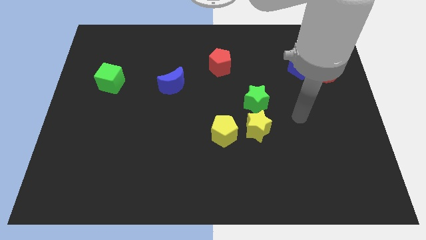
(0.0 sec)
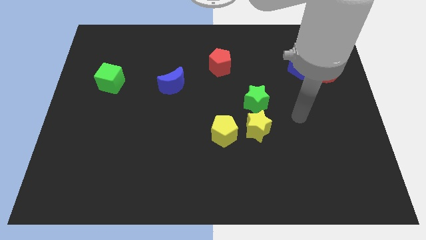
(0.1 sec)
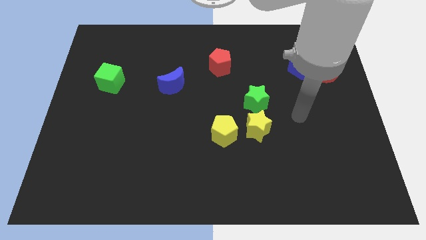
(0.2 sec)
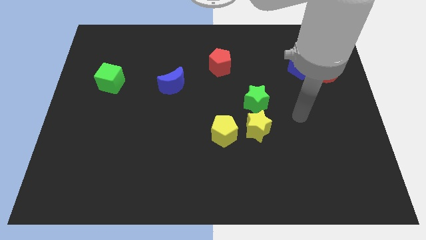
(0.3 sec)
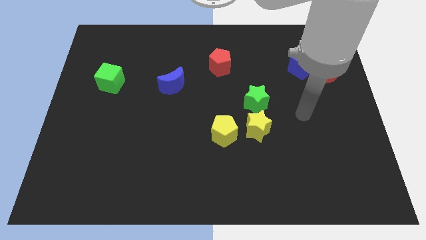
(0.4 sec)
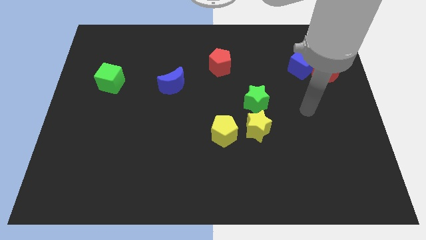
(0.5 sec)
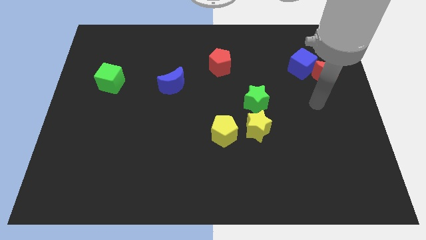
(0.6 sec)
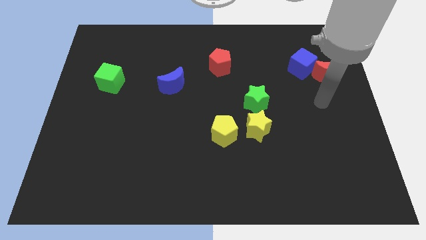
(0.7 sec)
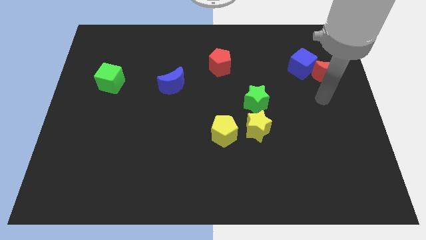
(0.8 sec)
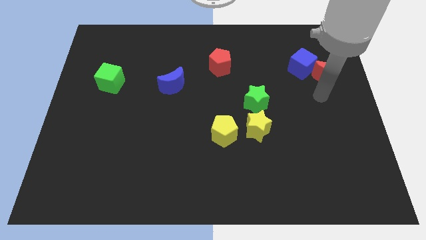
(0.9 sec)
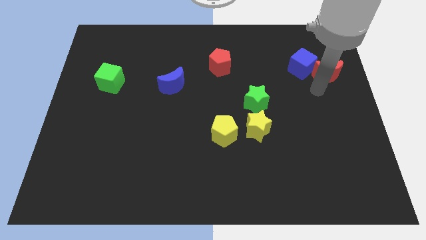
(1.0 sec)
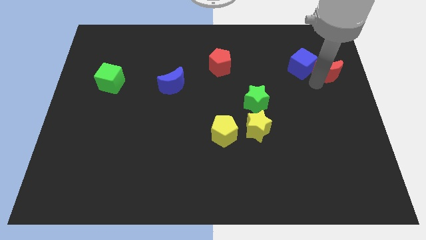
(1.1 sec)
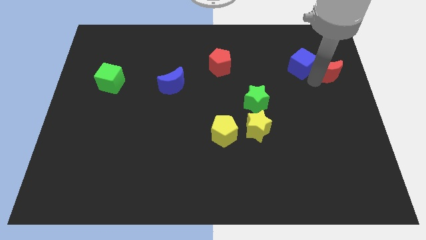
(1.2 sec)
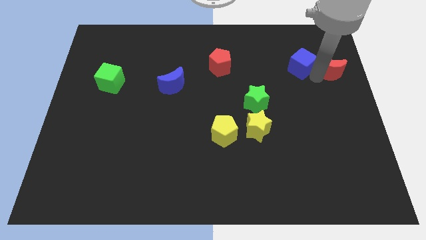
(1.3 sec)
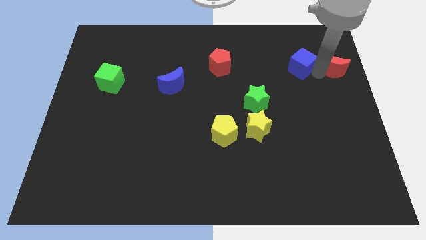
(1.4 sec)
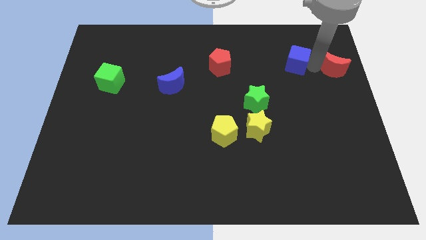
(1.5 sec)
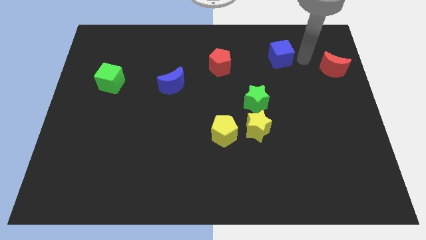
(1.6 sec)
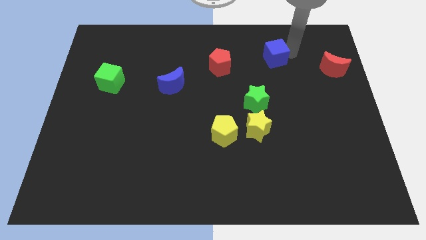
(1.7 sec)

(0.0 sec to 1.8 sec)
separate the red moon from the blue cube

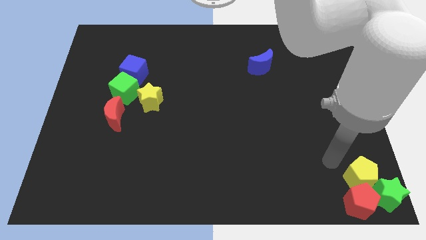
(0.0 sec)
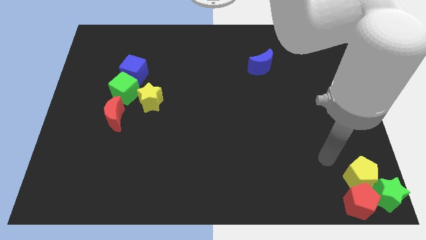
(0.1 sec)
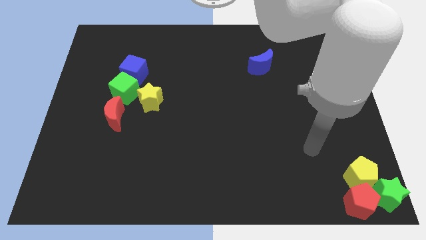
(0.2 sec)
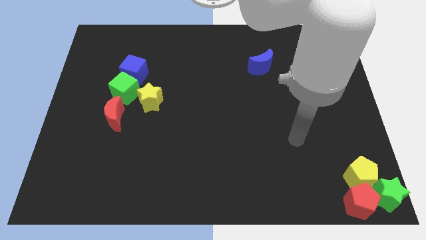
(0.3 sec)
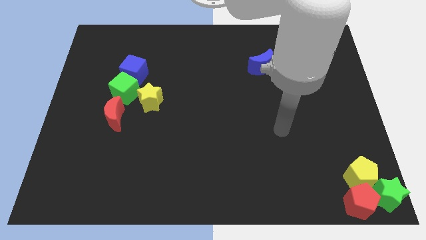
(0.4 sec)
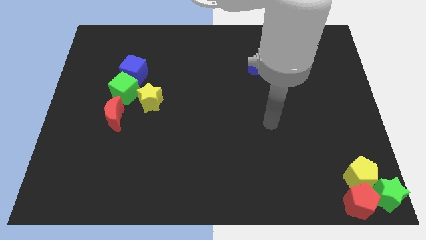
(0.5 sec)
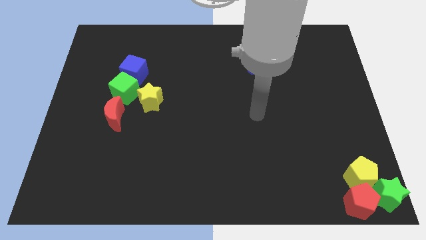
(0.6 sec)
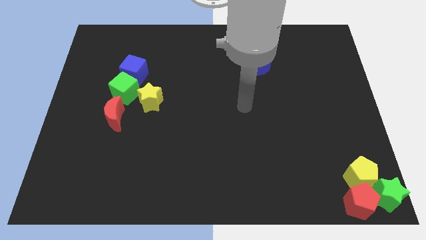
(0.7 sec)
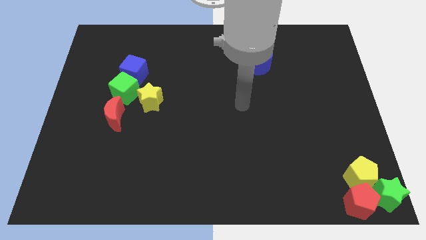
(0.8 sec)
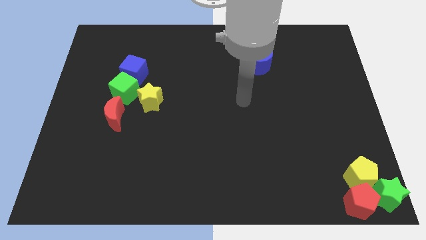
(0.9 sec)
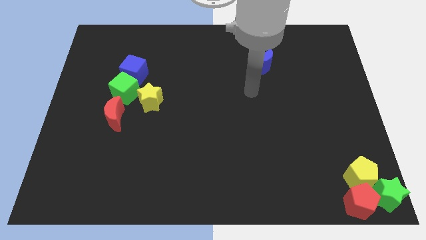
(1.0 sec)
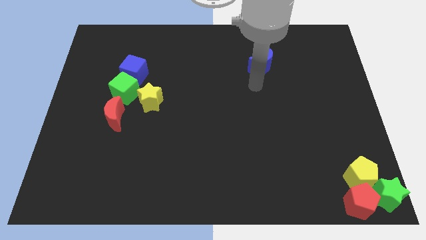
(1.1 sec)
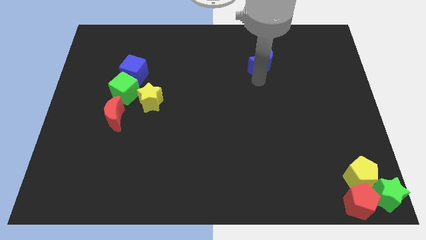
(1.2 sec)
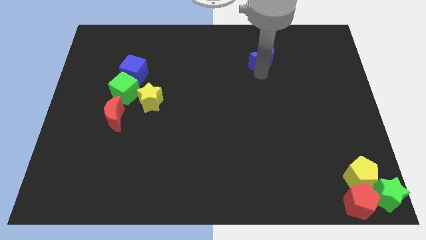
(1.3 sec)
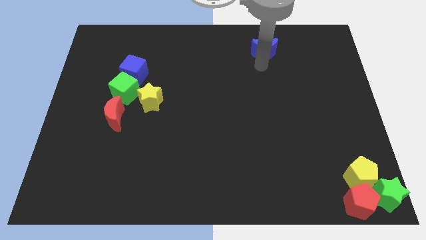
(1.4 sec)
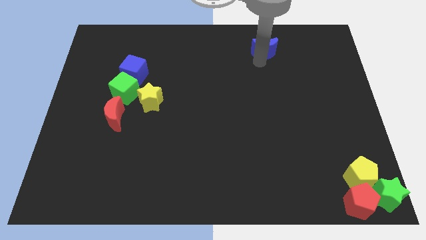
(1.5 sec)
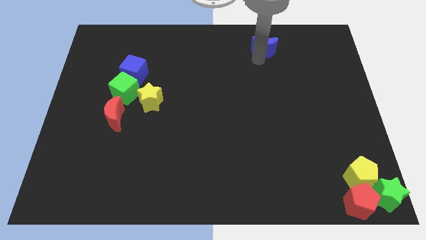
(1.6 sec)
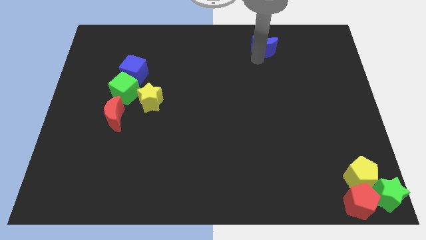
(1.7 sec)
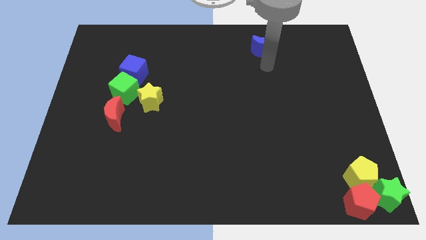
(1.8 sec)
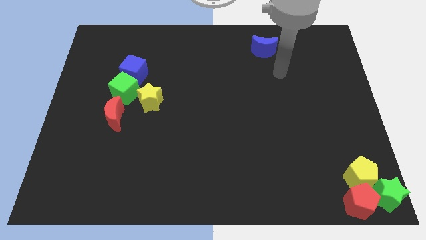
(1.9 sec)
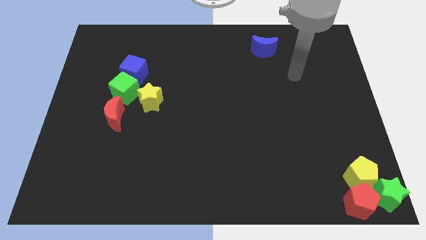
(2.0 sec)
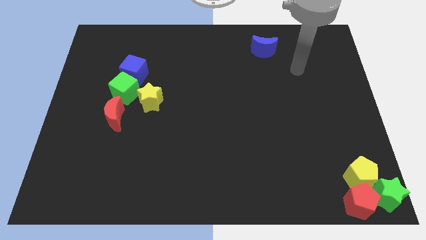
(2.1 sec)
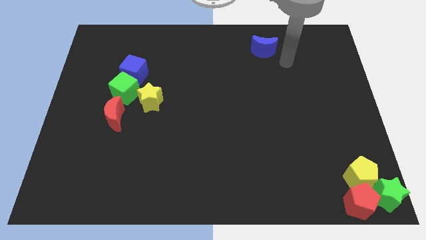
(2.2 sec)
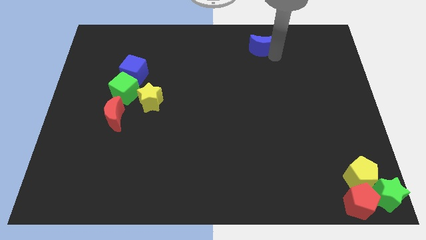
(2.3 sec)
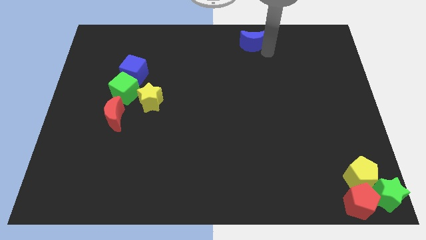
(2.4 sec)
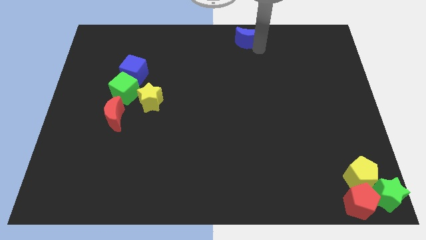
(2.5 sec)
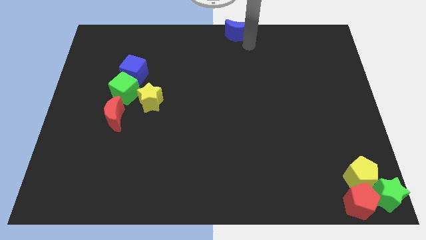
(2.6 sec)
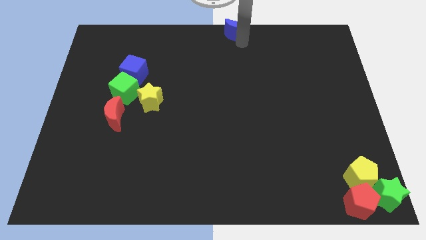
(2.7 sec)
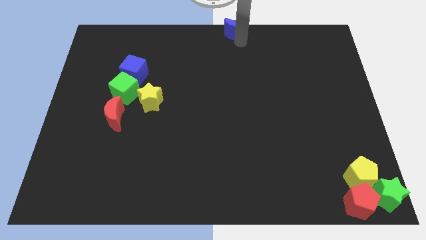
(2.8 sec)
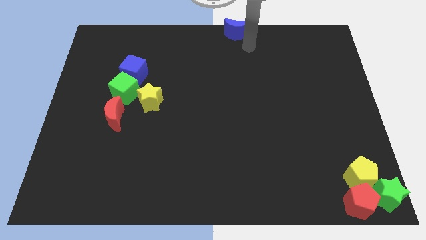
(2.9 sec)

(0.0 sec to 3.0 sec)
push the blue moon towards the top center of the board

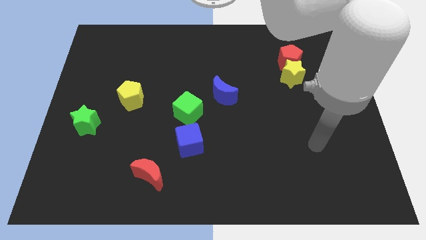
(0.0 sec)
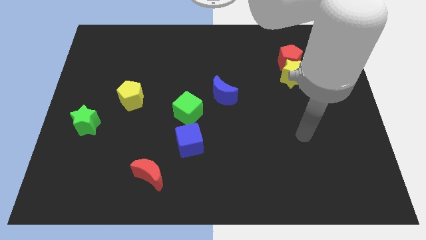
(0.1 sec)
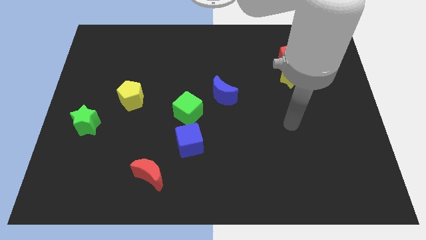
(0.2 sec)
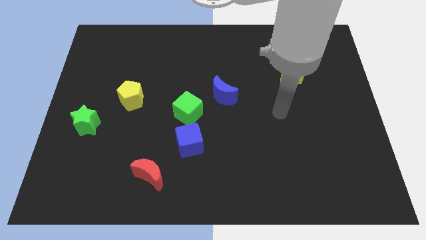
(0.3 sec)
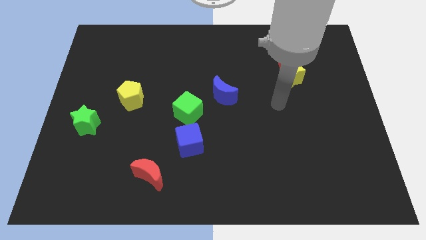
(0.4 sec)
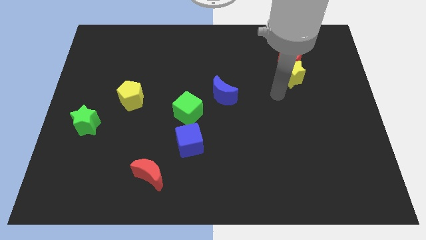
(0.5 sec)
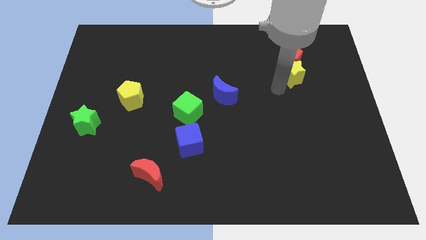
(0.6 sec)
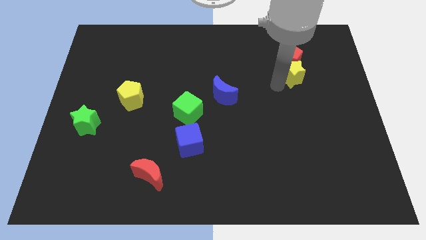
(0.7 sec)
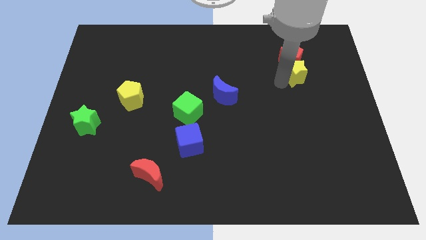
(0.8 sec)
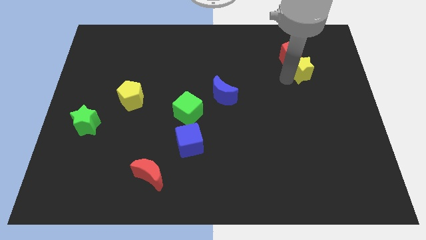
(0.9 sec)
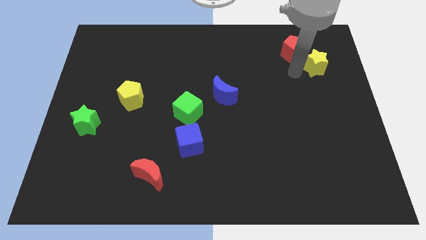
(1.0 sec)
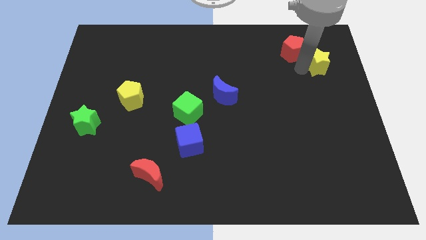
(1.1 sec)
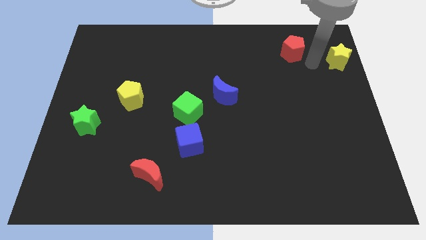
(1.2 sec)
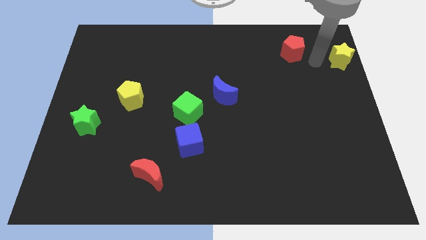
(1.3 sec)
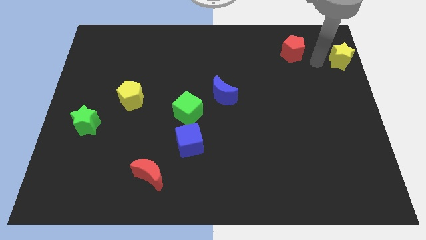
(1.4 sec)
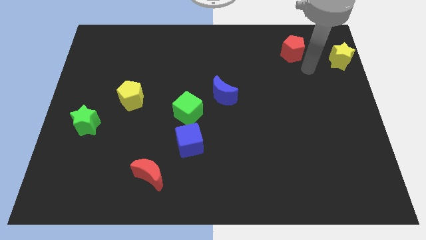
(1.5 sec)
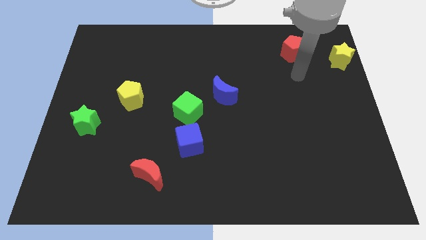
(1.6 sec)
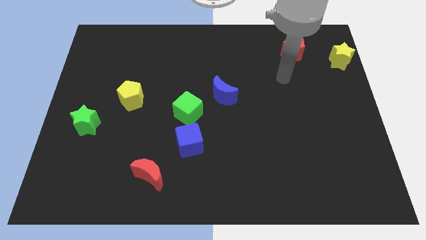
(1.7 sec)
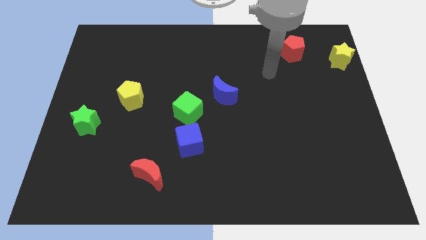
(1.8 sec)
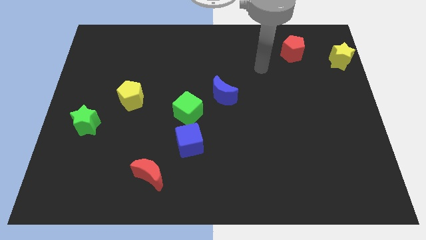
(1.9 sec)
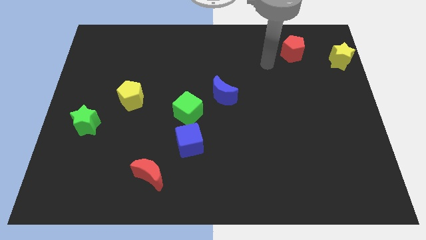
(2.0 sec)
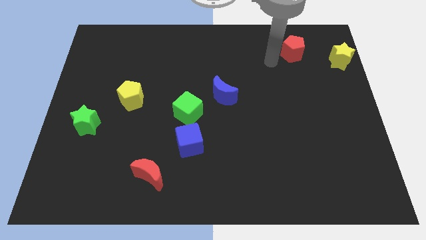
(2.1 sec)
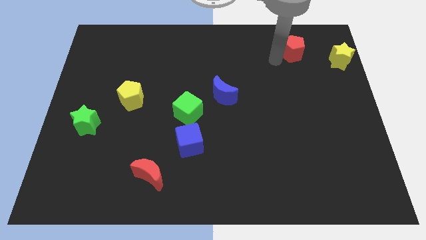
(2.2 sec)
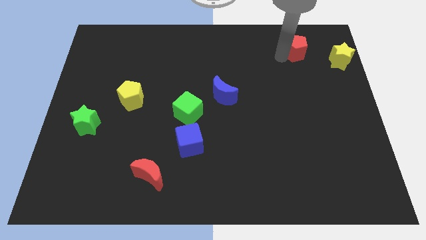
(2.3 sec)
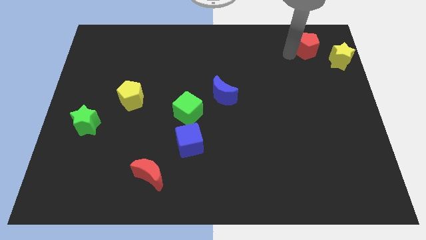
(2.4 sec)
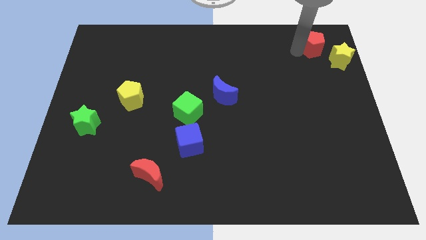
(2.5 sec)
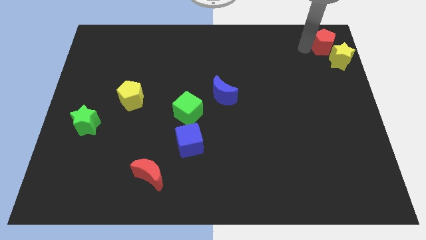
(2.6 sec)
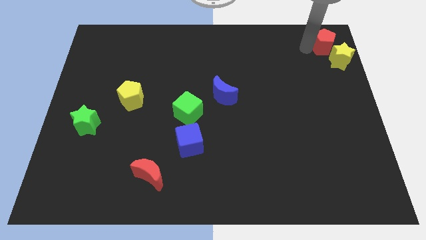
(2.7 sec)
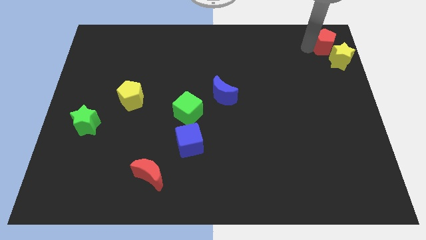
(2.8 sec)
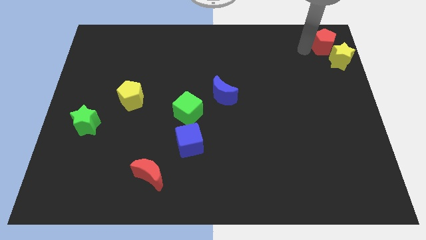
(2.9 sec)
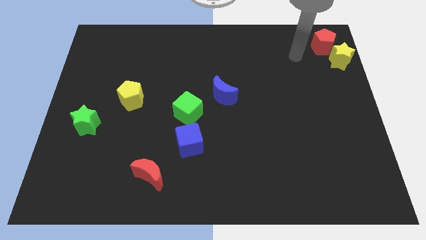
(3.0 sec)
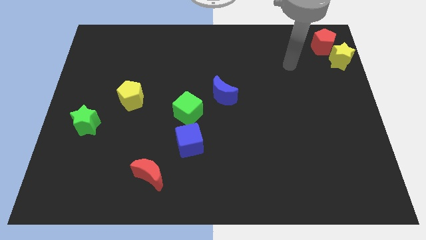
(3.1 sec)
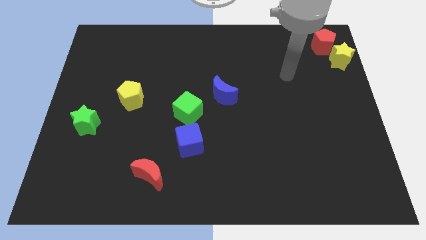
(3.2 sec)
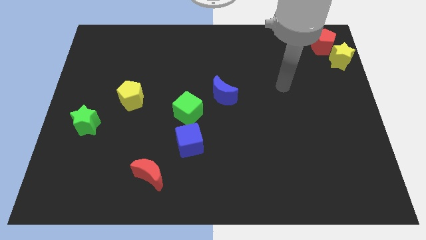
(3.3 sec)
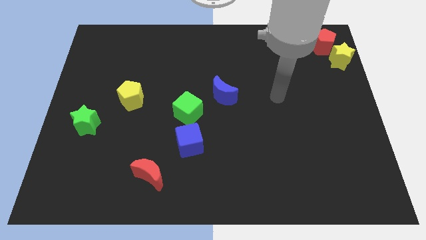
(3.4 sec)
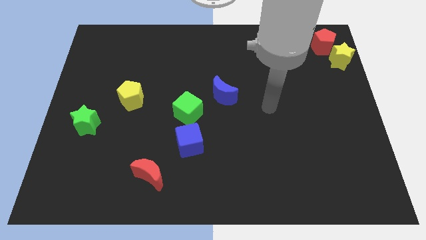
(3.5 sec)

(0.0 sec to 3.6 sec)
push the yellow star and red pentagon towards the top right corner of the board

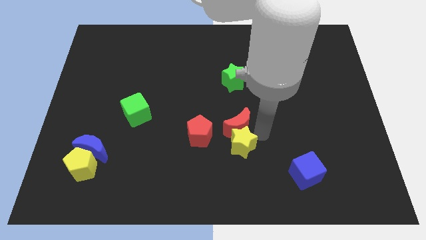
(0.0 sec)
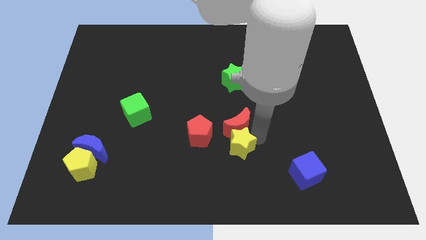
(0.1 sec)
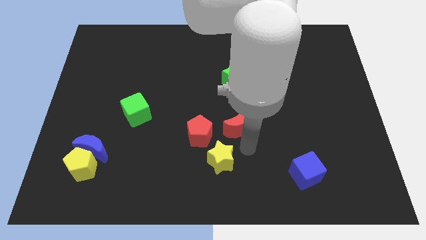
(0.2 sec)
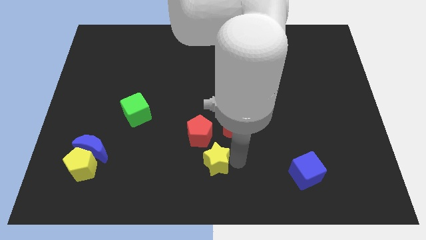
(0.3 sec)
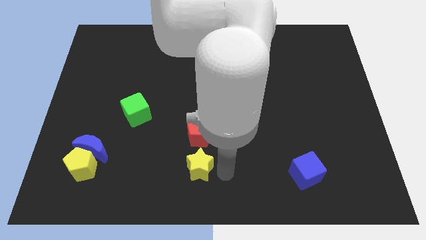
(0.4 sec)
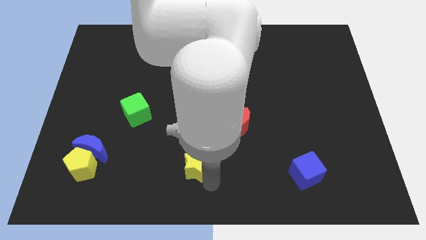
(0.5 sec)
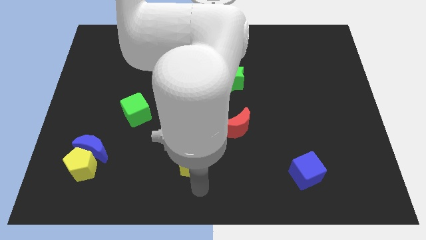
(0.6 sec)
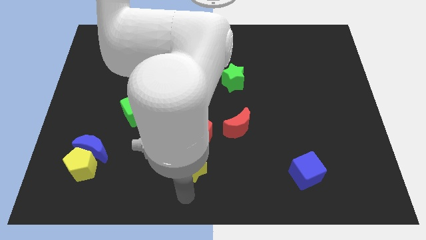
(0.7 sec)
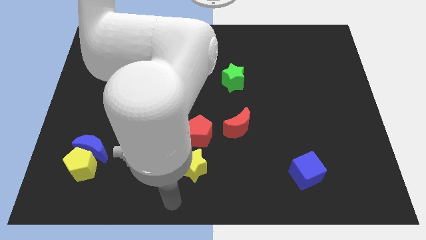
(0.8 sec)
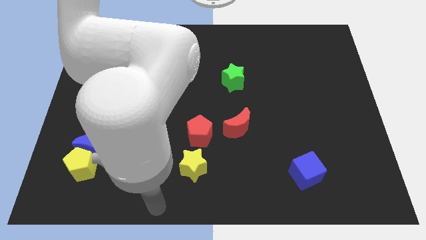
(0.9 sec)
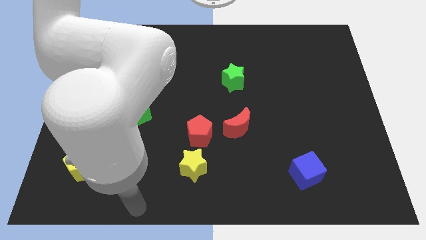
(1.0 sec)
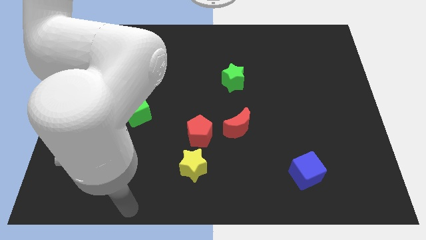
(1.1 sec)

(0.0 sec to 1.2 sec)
place the yellow star below the red pentagon
